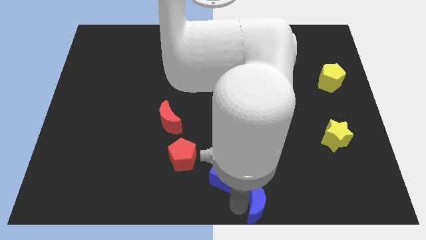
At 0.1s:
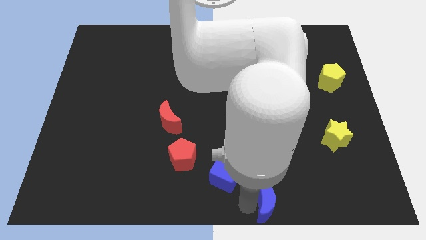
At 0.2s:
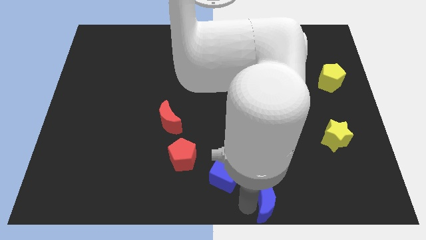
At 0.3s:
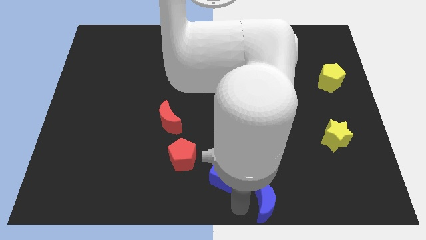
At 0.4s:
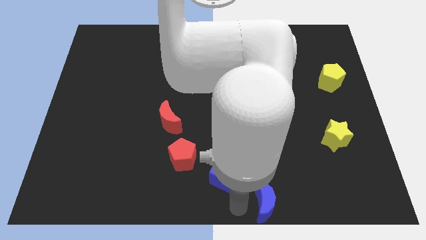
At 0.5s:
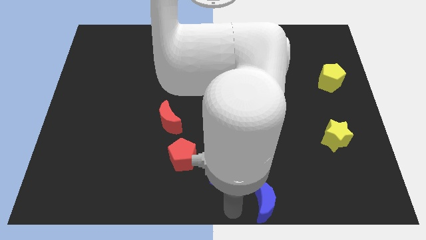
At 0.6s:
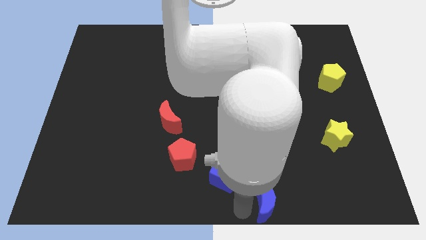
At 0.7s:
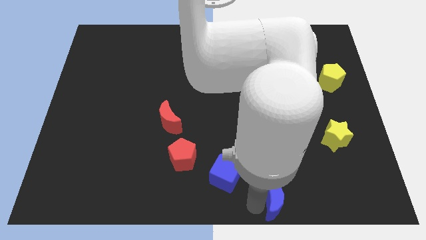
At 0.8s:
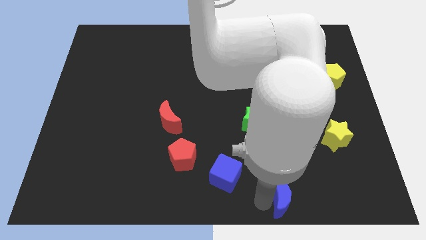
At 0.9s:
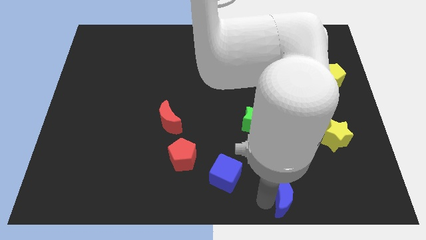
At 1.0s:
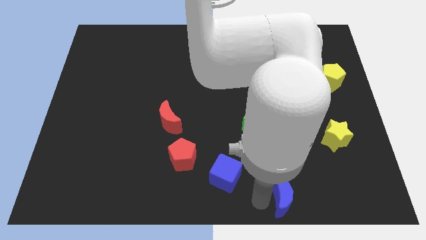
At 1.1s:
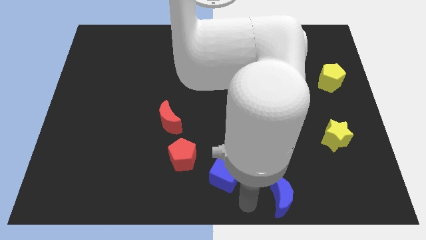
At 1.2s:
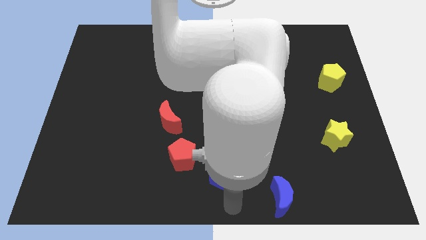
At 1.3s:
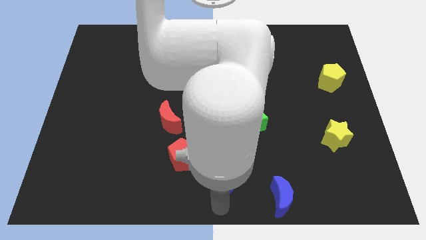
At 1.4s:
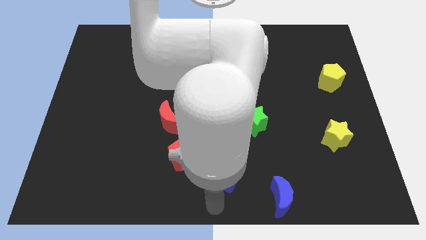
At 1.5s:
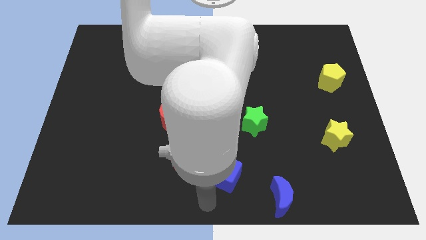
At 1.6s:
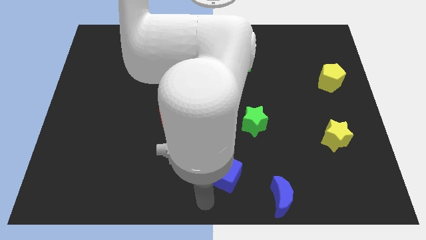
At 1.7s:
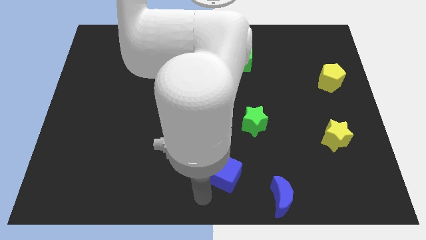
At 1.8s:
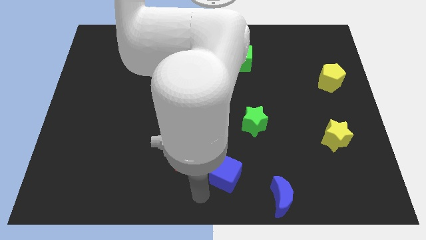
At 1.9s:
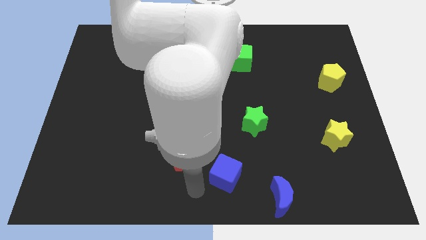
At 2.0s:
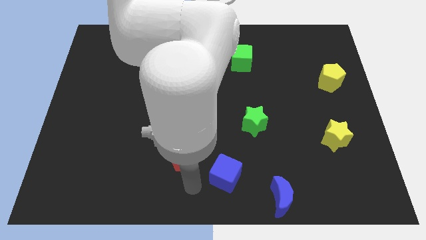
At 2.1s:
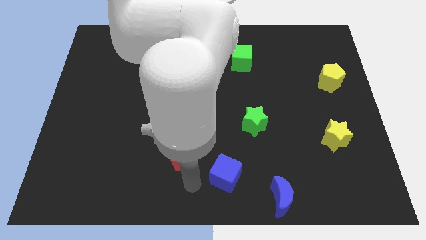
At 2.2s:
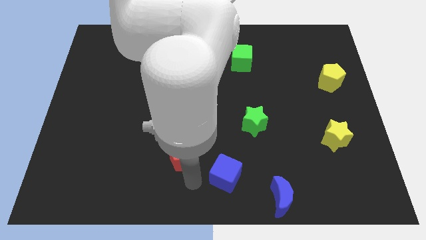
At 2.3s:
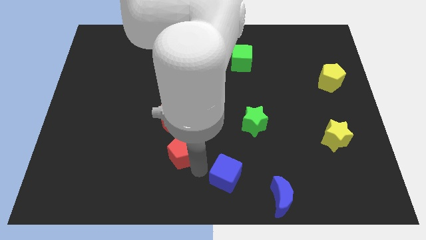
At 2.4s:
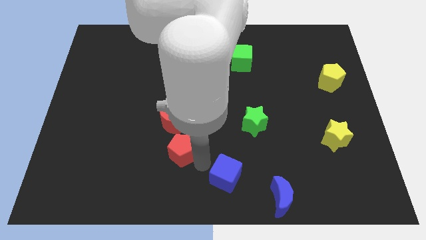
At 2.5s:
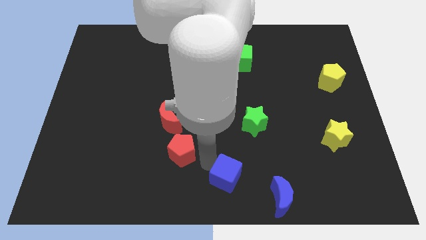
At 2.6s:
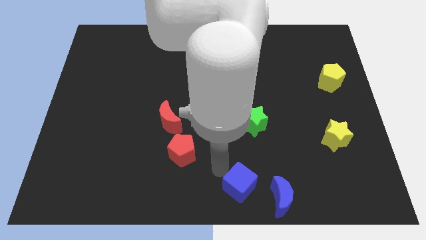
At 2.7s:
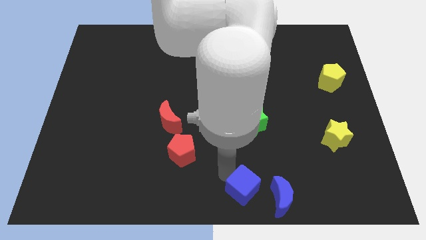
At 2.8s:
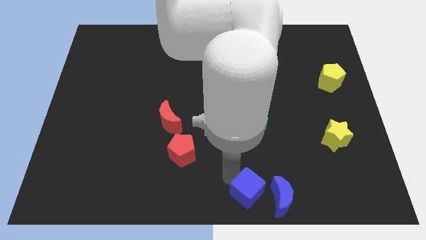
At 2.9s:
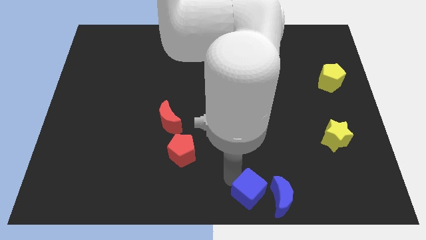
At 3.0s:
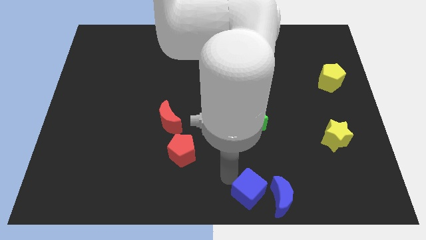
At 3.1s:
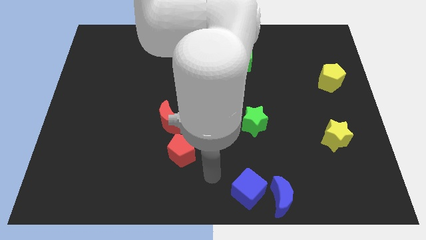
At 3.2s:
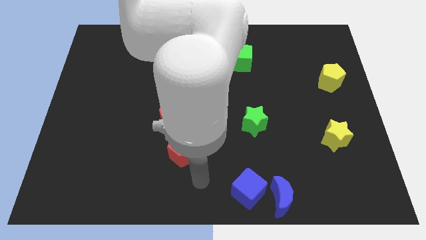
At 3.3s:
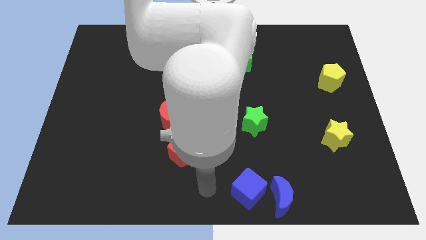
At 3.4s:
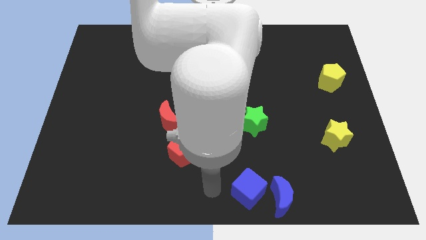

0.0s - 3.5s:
move the blue cube to the left side of the blue moon

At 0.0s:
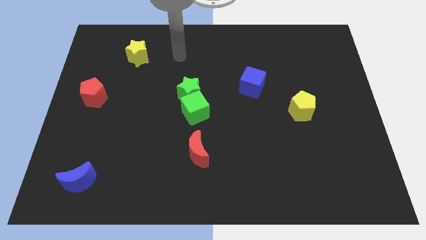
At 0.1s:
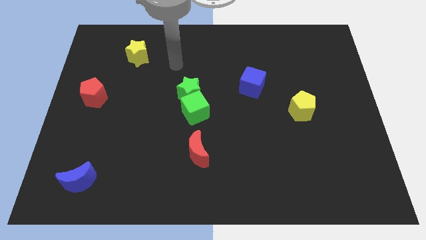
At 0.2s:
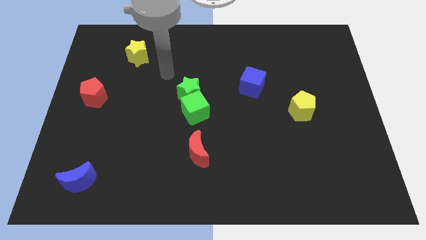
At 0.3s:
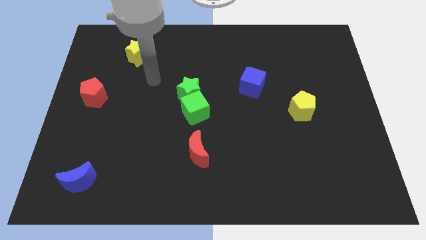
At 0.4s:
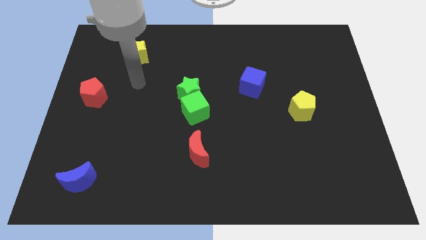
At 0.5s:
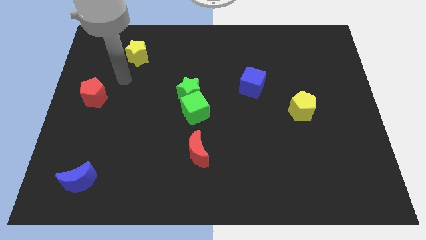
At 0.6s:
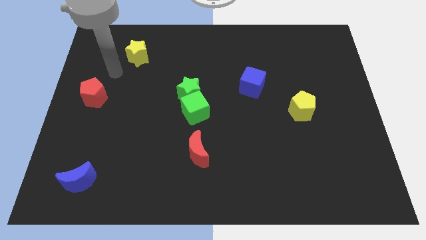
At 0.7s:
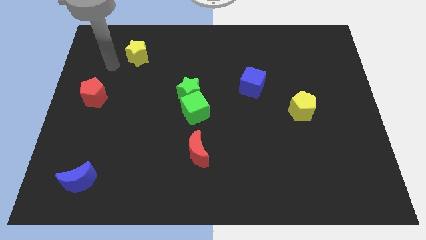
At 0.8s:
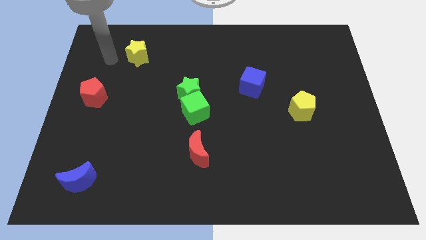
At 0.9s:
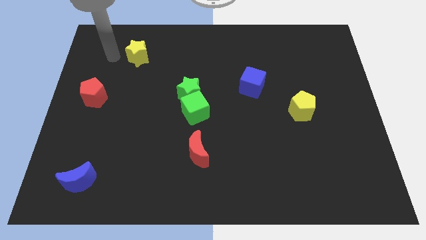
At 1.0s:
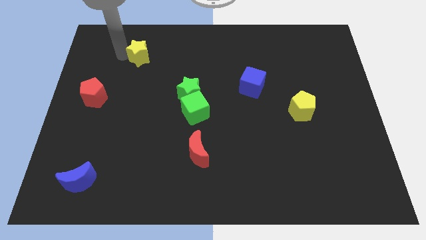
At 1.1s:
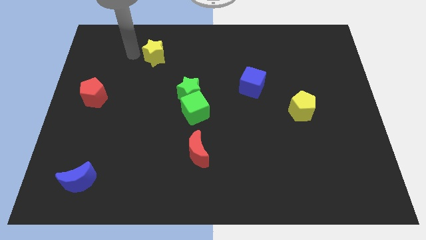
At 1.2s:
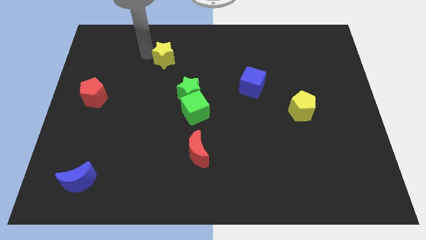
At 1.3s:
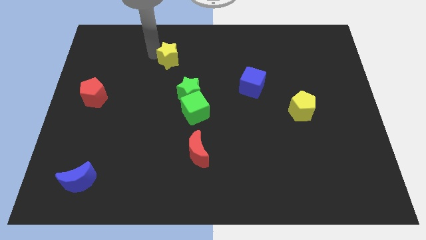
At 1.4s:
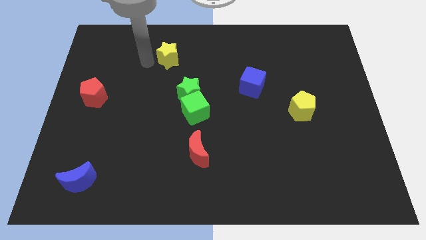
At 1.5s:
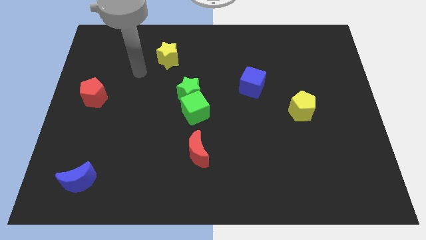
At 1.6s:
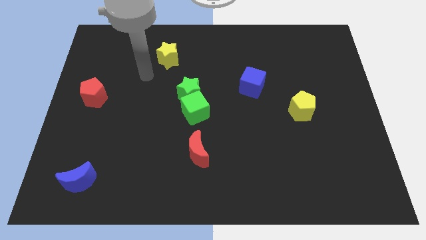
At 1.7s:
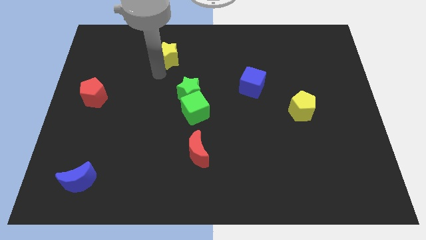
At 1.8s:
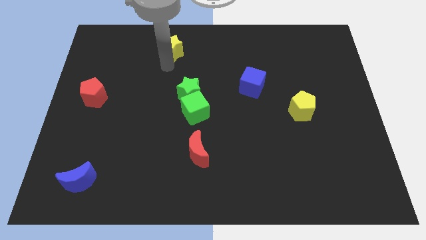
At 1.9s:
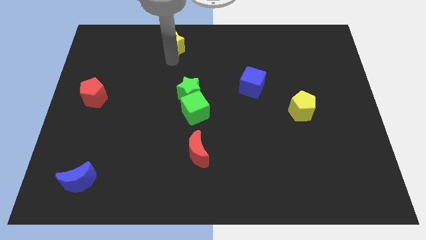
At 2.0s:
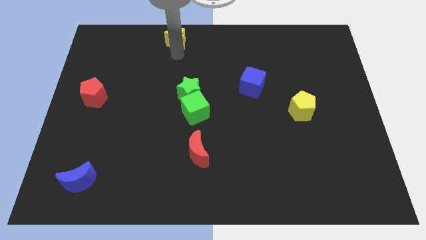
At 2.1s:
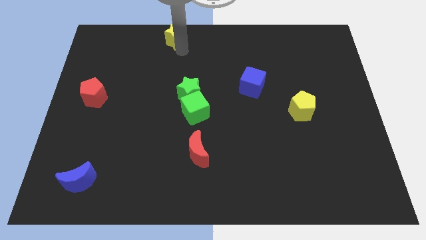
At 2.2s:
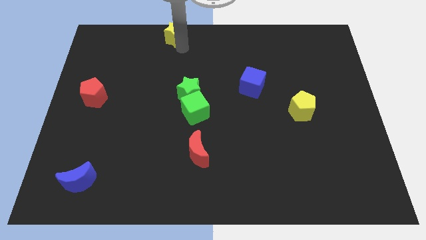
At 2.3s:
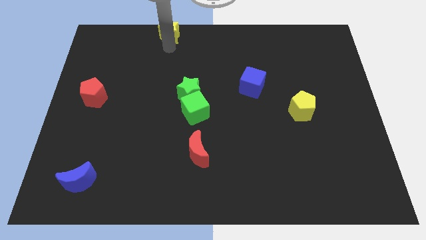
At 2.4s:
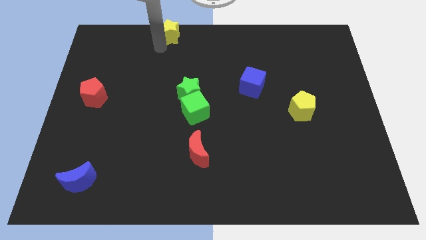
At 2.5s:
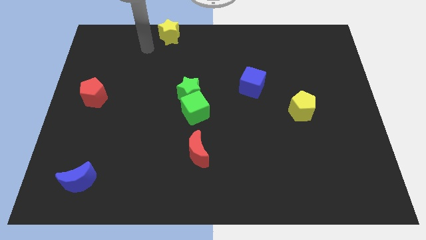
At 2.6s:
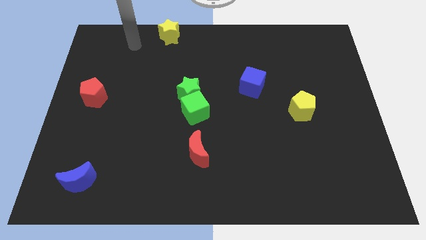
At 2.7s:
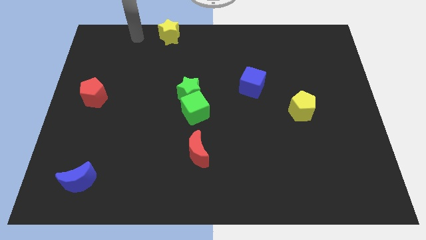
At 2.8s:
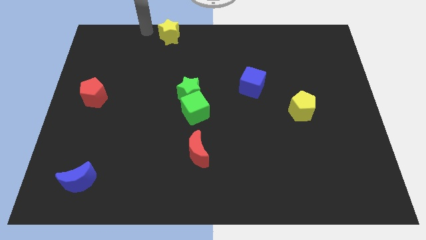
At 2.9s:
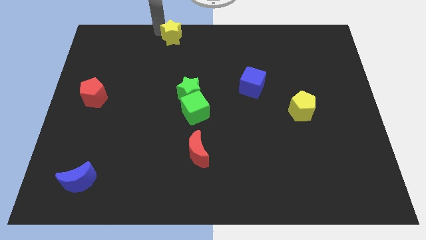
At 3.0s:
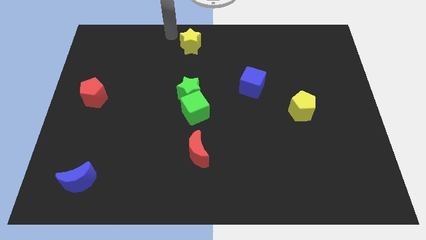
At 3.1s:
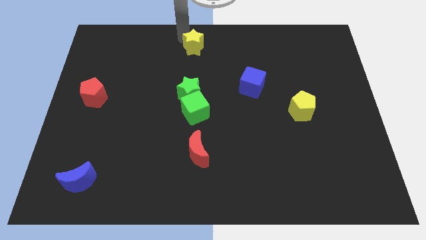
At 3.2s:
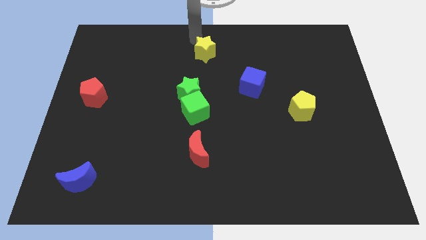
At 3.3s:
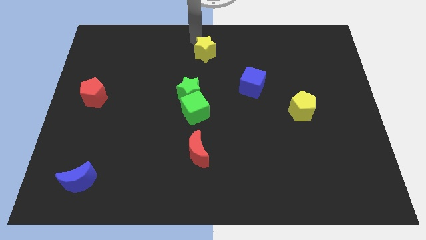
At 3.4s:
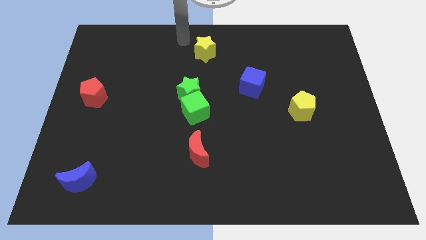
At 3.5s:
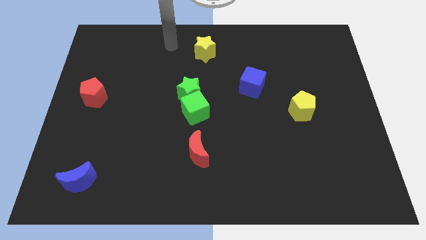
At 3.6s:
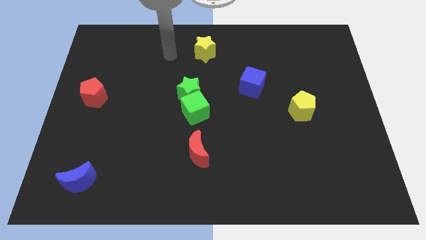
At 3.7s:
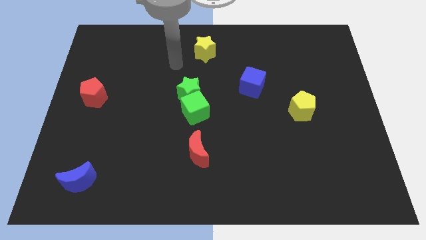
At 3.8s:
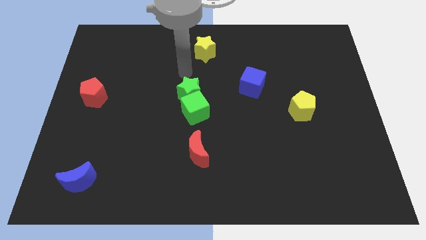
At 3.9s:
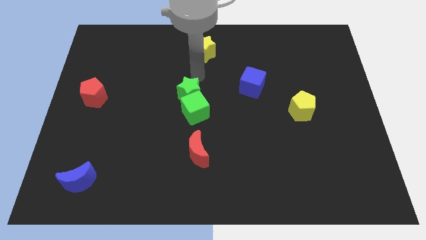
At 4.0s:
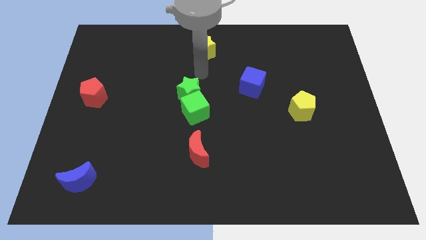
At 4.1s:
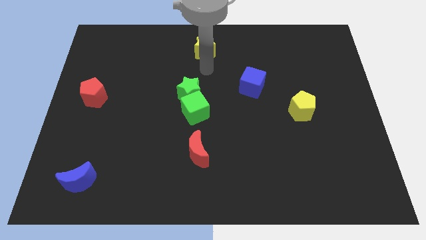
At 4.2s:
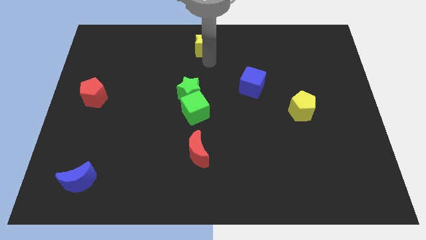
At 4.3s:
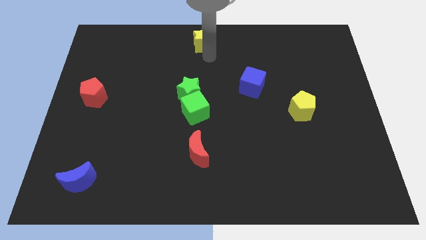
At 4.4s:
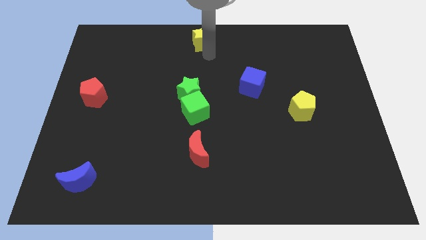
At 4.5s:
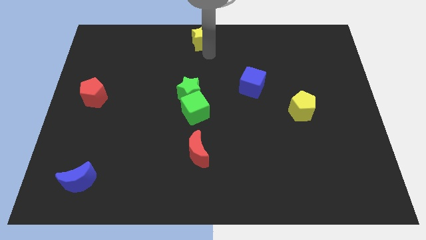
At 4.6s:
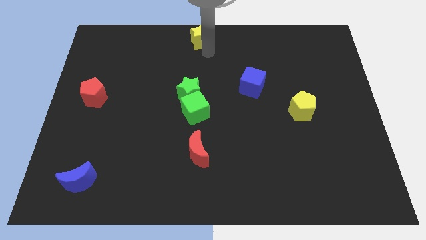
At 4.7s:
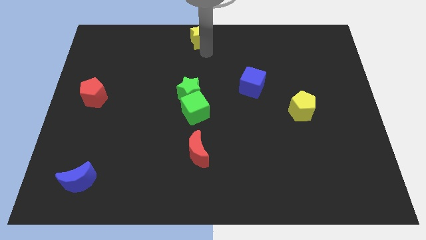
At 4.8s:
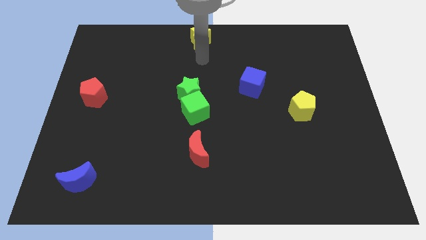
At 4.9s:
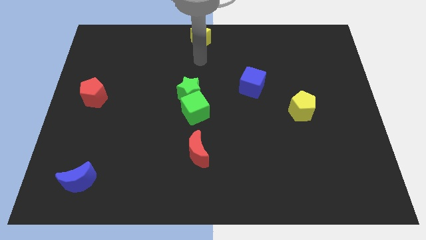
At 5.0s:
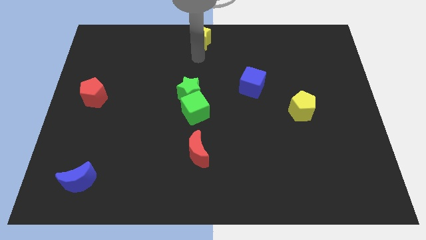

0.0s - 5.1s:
move the yellow star to the top center of the board

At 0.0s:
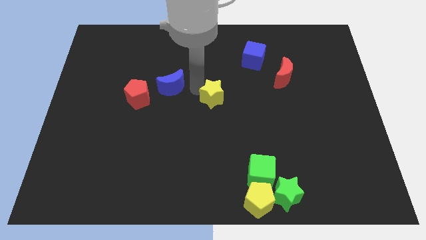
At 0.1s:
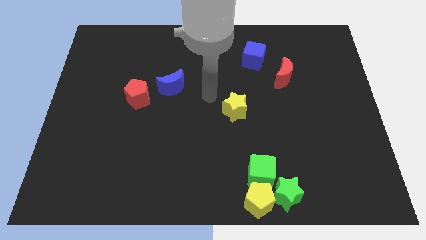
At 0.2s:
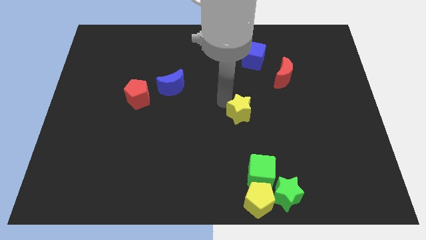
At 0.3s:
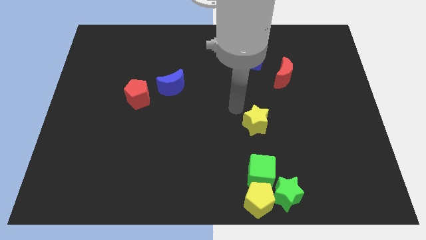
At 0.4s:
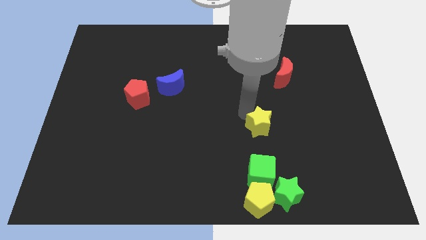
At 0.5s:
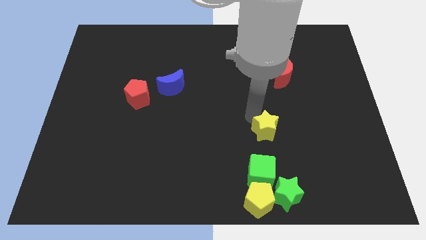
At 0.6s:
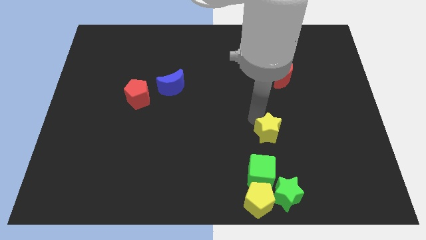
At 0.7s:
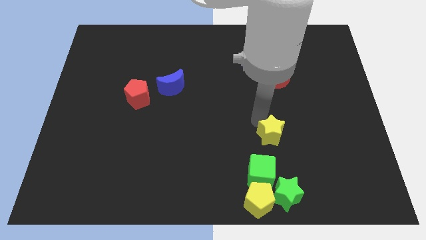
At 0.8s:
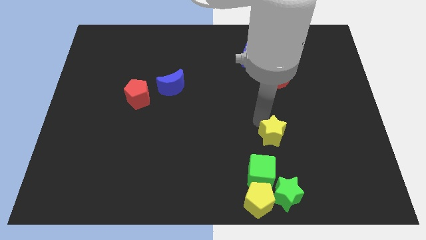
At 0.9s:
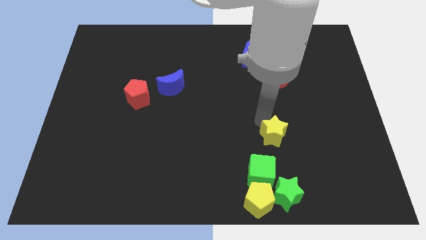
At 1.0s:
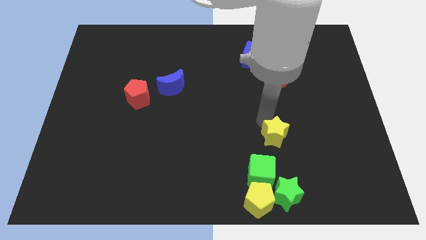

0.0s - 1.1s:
place the yellow star above the green cube
